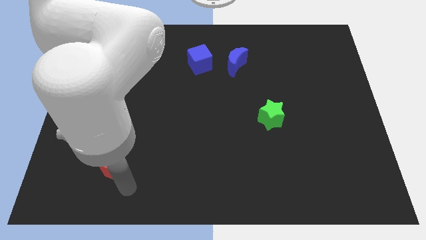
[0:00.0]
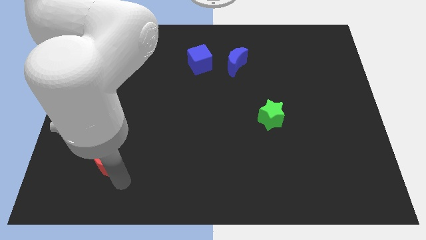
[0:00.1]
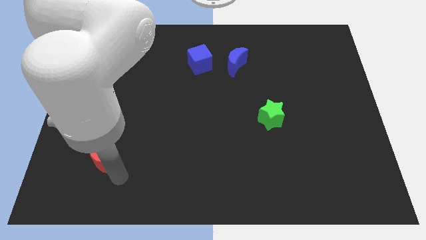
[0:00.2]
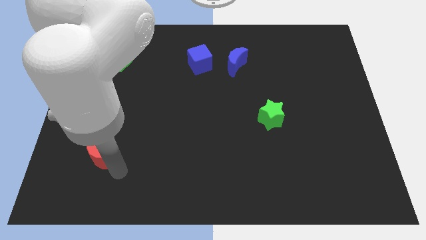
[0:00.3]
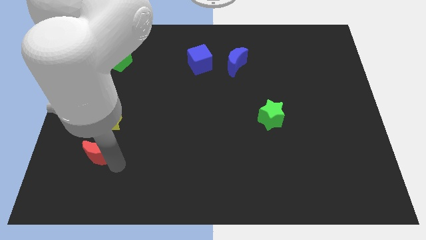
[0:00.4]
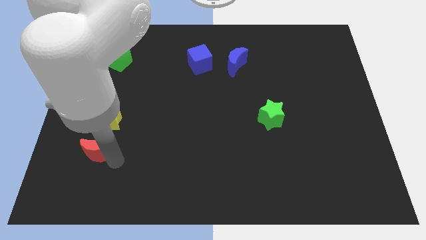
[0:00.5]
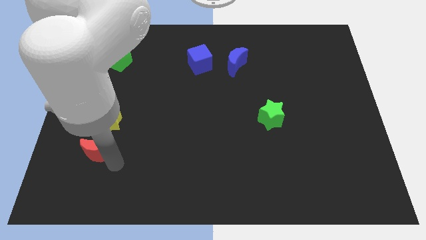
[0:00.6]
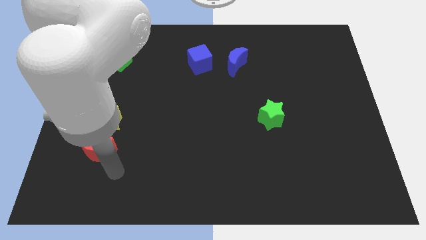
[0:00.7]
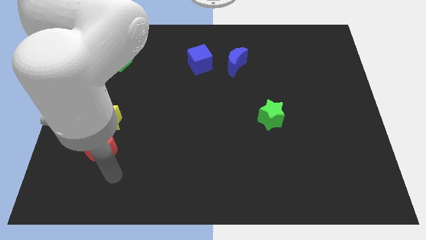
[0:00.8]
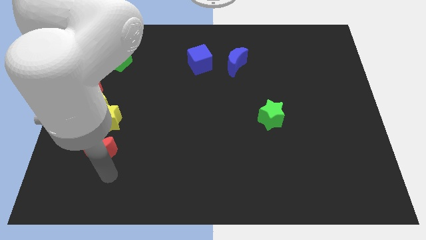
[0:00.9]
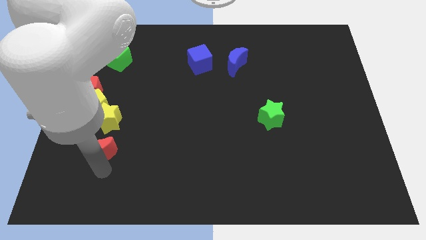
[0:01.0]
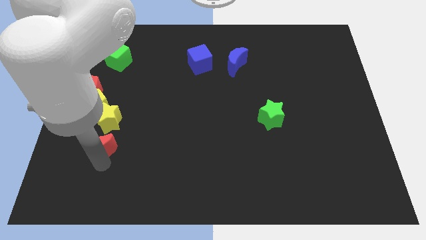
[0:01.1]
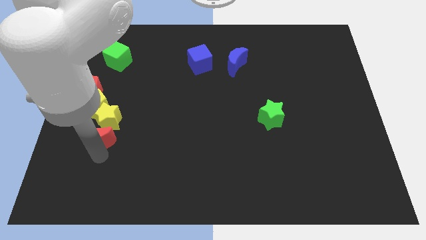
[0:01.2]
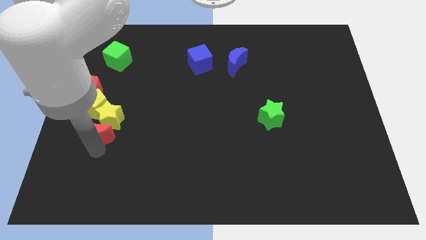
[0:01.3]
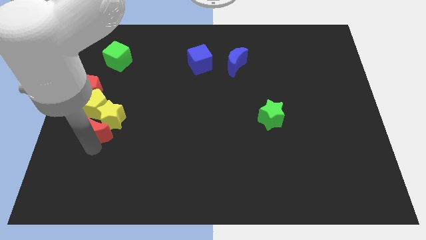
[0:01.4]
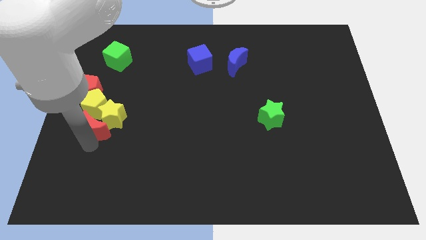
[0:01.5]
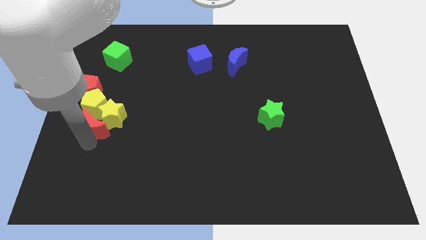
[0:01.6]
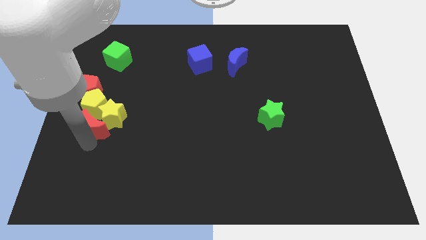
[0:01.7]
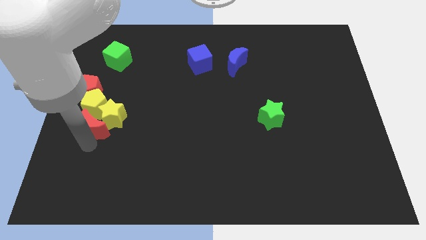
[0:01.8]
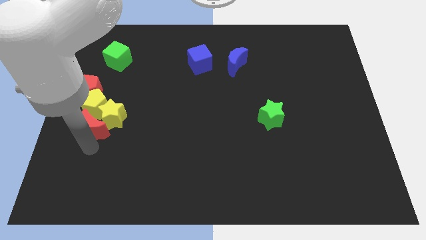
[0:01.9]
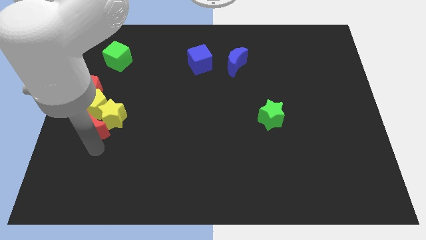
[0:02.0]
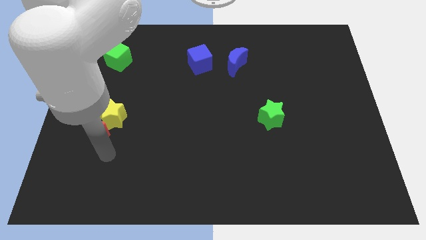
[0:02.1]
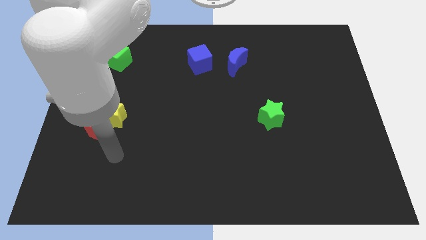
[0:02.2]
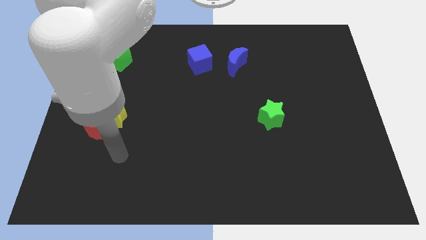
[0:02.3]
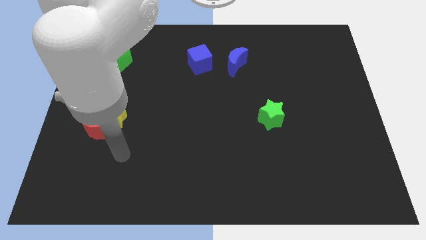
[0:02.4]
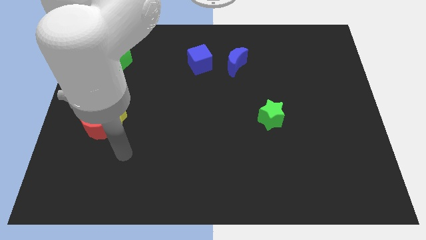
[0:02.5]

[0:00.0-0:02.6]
drag the red moon and place it below the yellow star

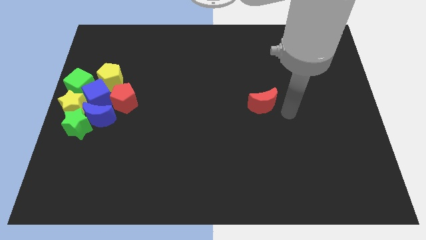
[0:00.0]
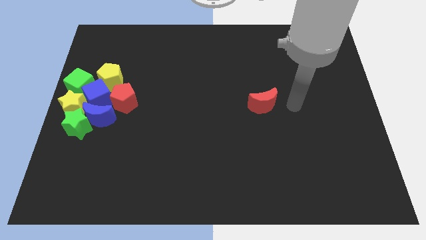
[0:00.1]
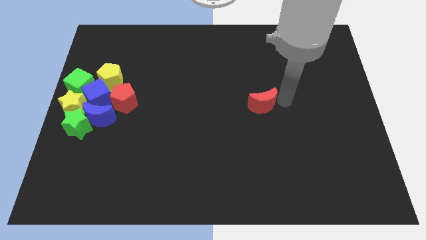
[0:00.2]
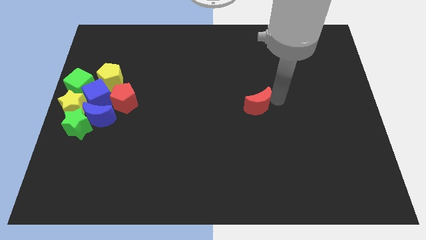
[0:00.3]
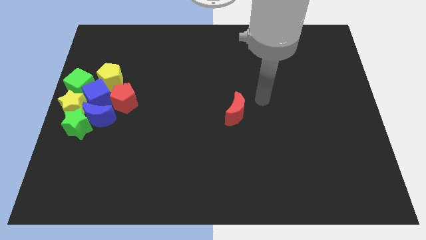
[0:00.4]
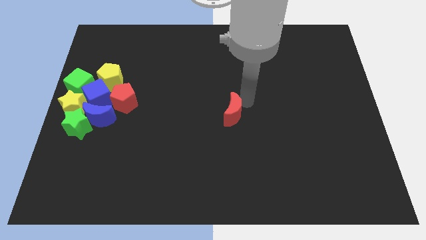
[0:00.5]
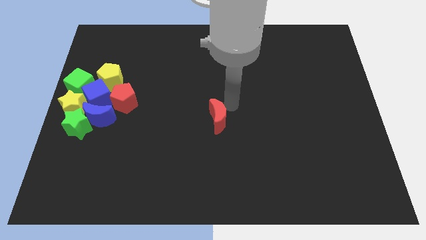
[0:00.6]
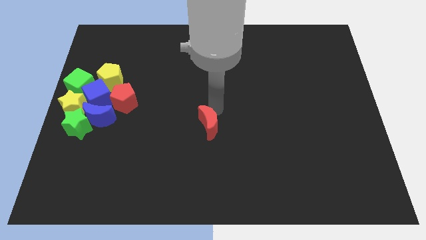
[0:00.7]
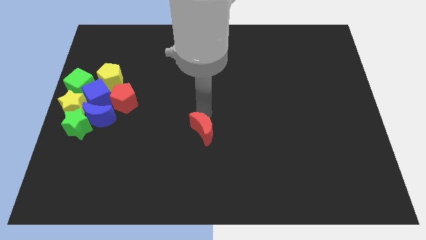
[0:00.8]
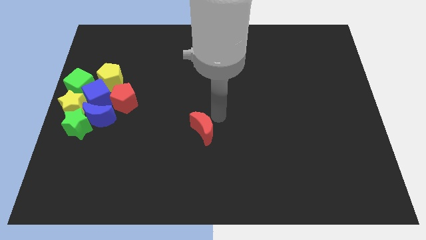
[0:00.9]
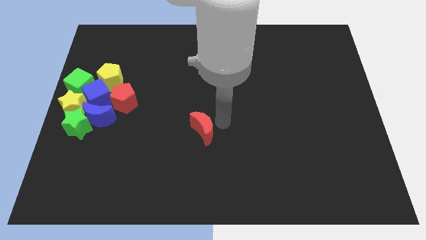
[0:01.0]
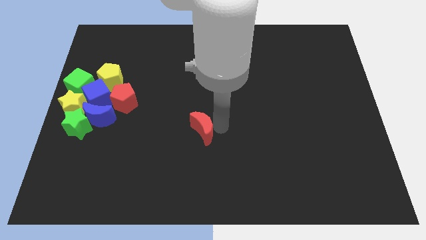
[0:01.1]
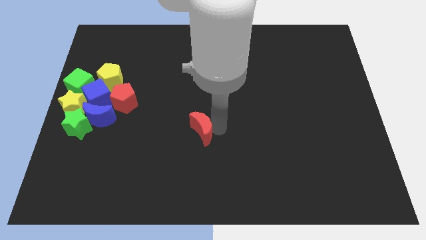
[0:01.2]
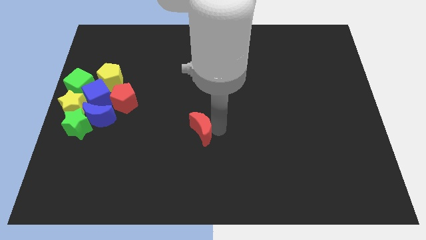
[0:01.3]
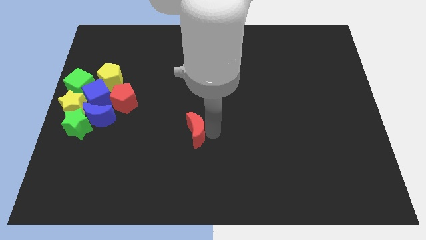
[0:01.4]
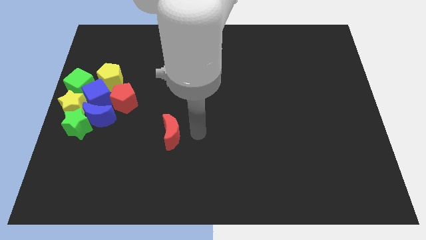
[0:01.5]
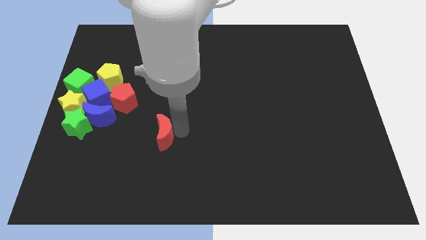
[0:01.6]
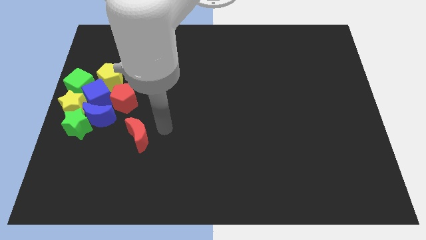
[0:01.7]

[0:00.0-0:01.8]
place the red moon diagonally bottom right to the red pentagon

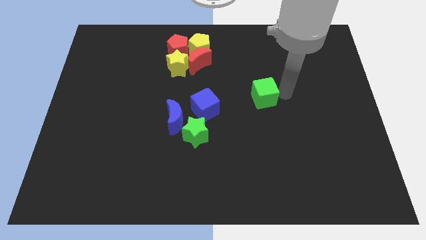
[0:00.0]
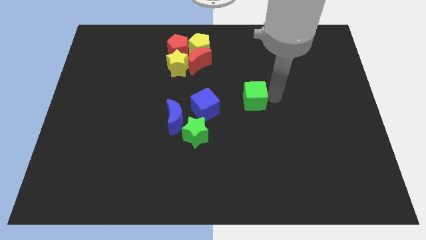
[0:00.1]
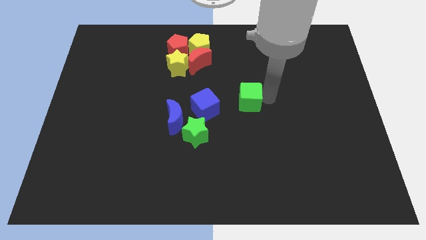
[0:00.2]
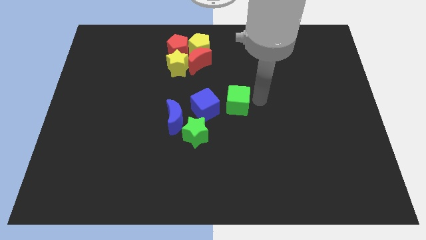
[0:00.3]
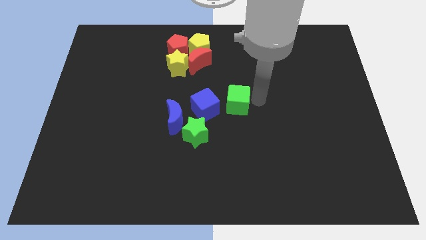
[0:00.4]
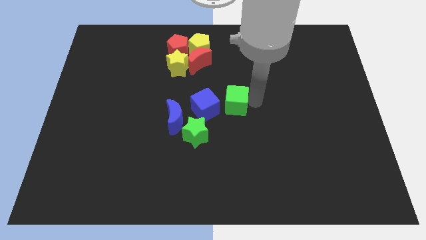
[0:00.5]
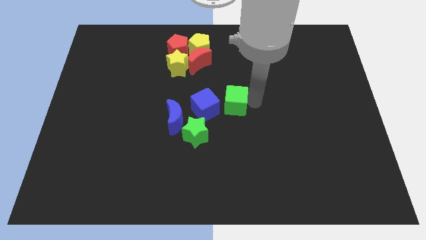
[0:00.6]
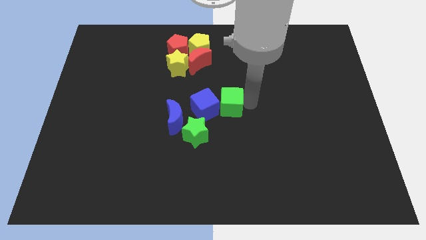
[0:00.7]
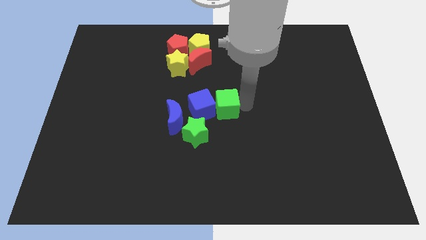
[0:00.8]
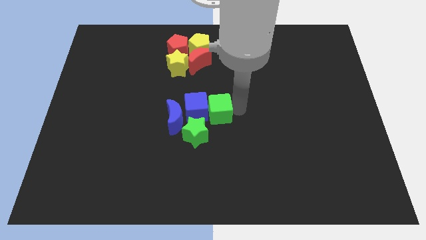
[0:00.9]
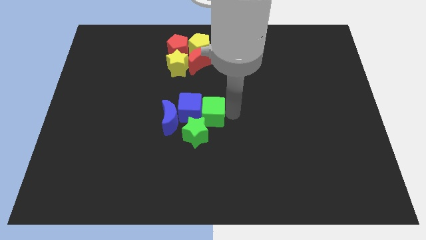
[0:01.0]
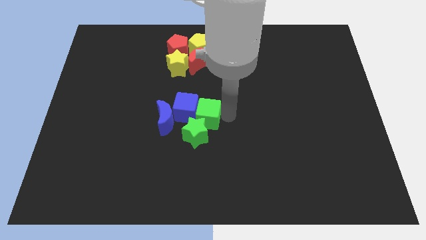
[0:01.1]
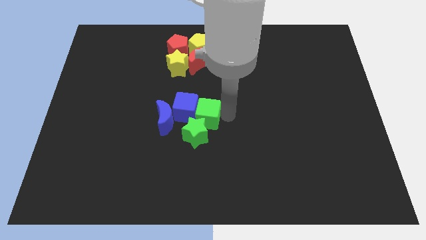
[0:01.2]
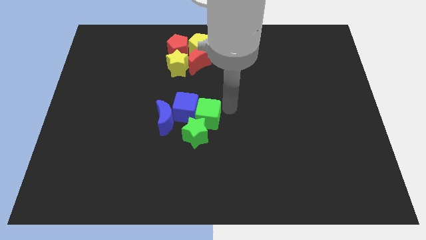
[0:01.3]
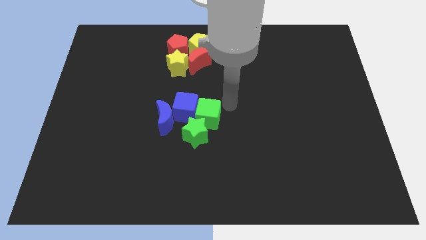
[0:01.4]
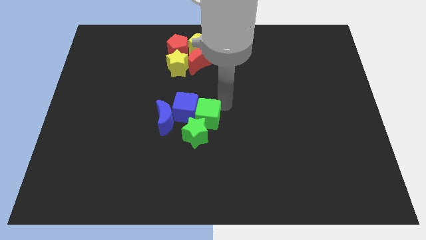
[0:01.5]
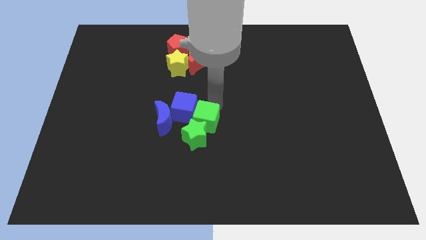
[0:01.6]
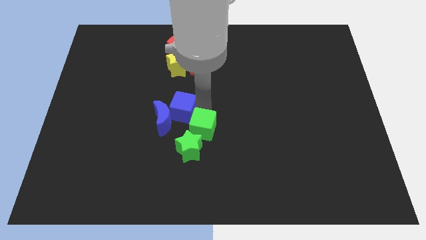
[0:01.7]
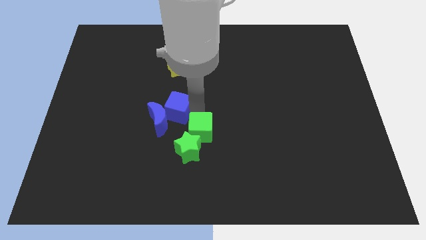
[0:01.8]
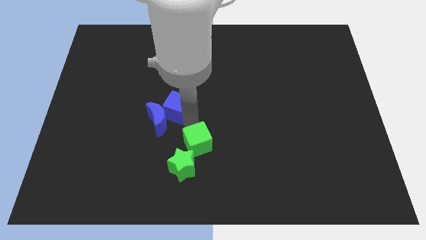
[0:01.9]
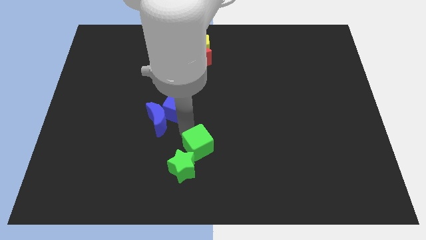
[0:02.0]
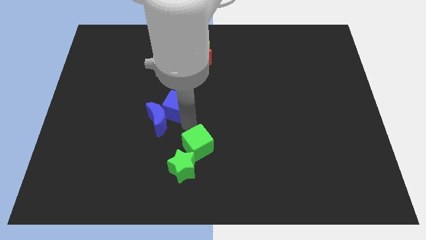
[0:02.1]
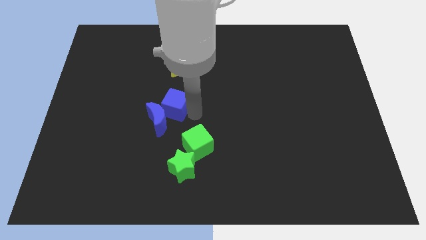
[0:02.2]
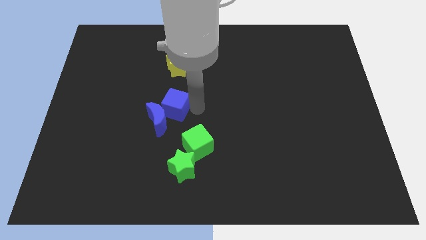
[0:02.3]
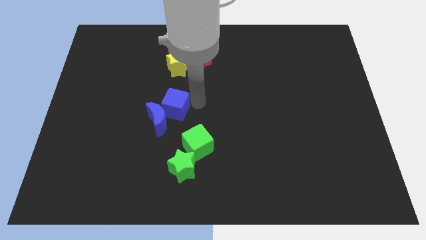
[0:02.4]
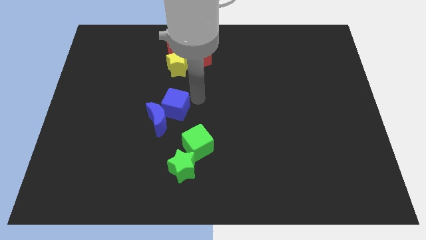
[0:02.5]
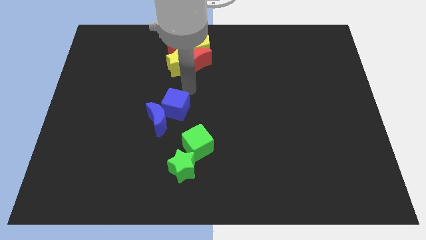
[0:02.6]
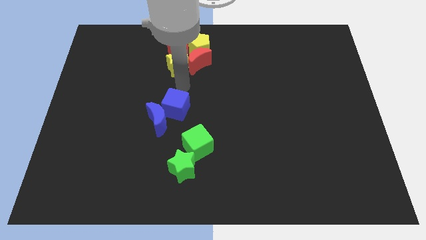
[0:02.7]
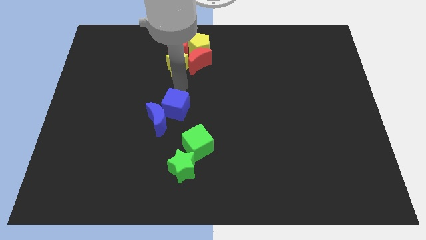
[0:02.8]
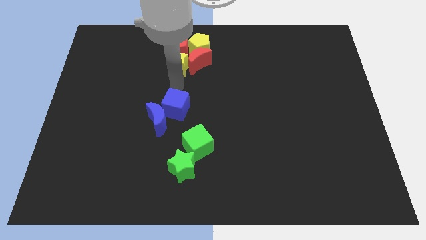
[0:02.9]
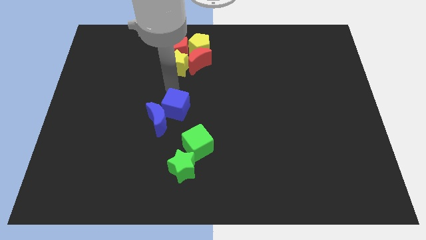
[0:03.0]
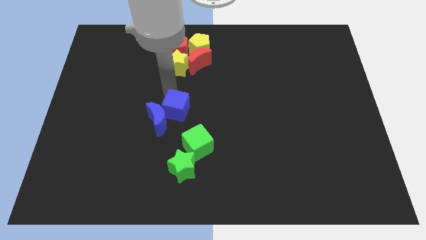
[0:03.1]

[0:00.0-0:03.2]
separate green blocks and the blue blocks

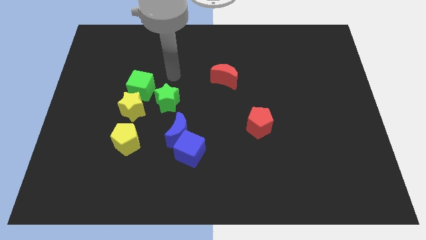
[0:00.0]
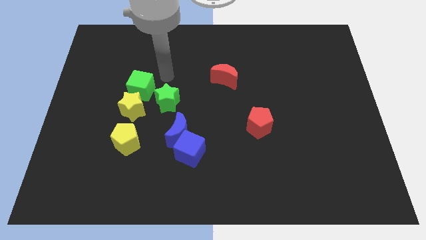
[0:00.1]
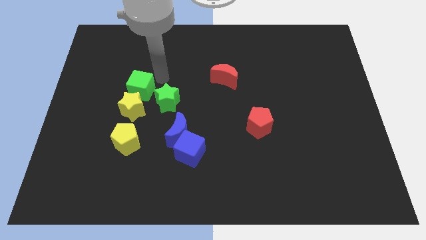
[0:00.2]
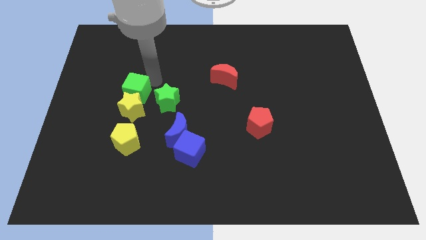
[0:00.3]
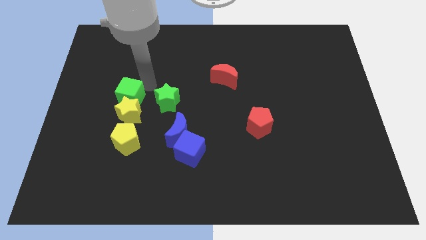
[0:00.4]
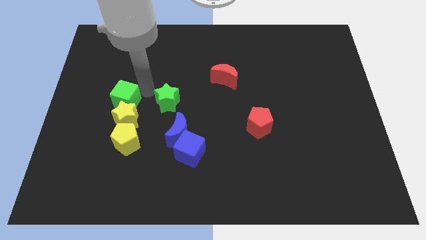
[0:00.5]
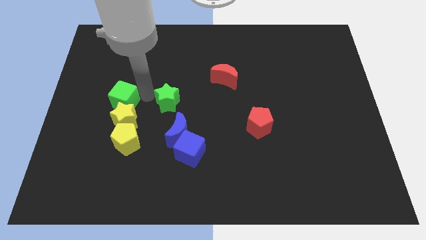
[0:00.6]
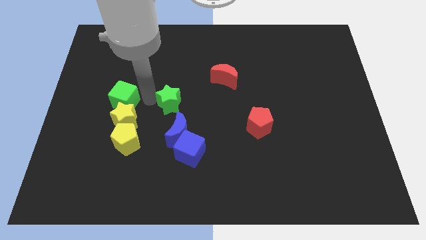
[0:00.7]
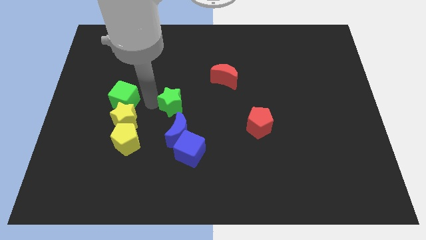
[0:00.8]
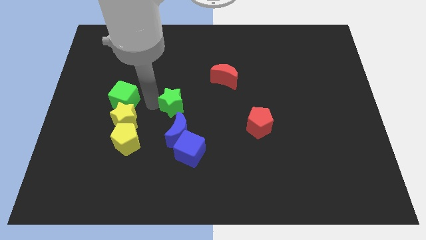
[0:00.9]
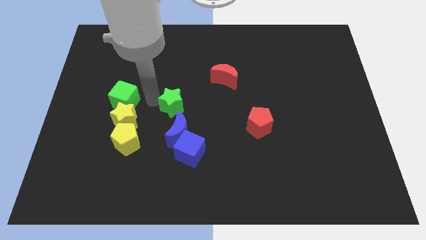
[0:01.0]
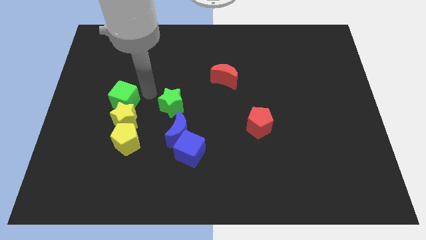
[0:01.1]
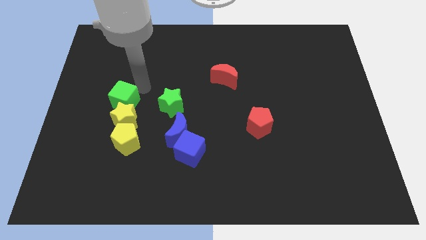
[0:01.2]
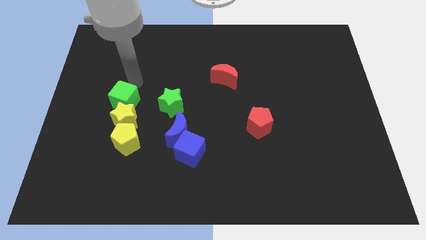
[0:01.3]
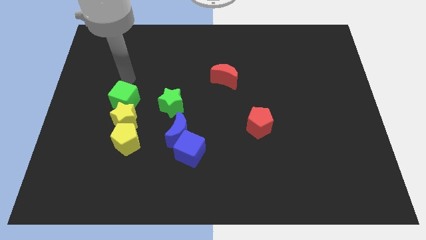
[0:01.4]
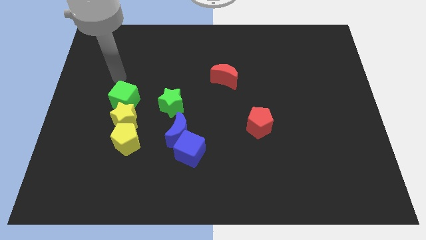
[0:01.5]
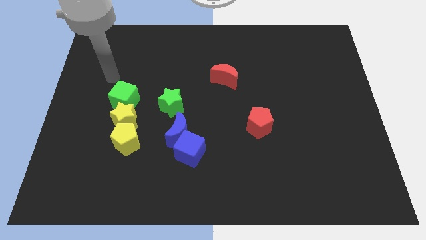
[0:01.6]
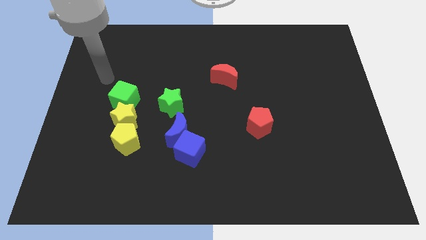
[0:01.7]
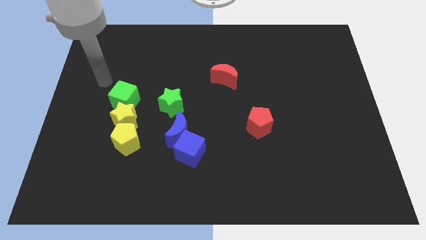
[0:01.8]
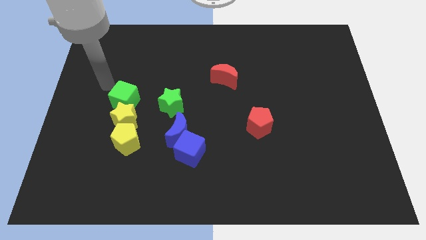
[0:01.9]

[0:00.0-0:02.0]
separate the green cube from the green star
